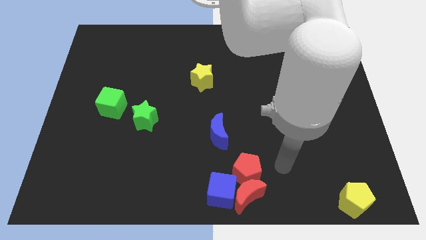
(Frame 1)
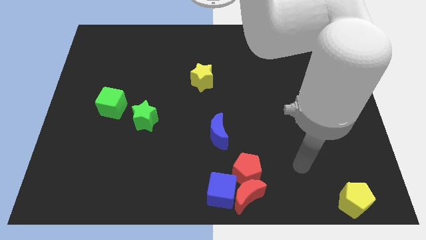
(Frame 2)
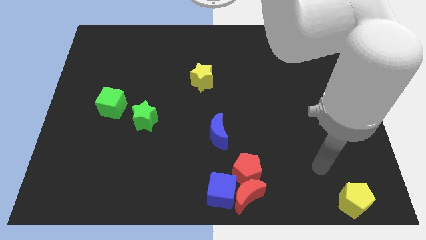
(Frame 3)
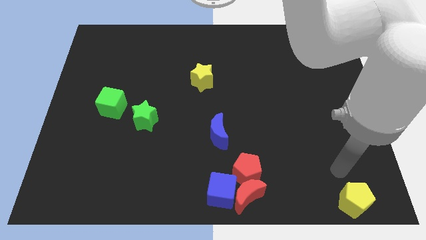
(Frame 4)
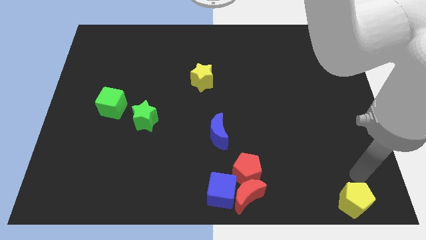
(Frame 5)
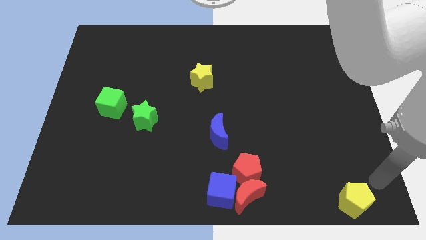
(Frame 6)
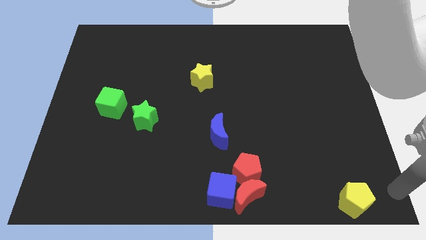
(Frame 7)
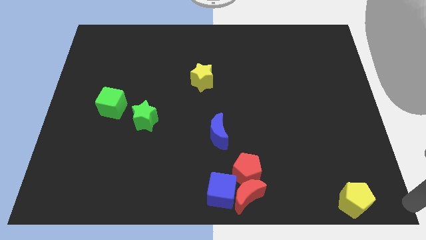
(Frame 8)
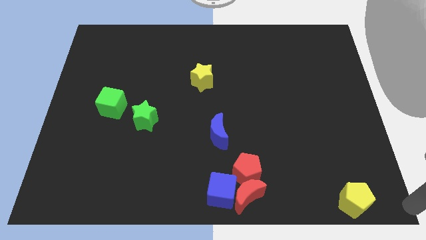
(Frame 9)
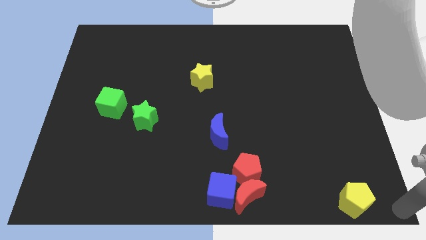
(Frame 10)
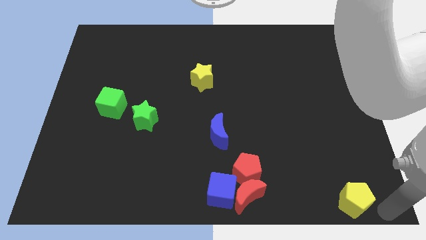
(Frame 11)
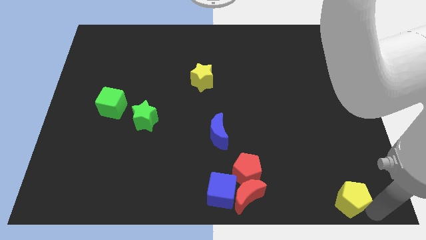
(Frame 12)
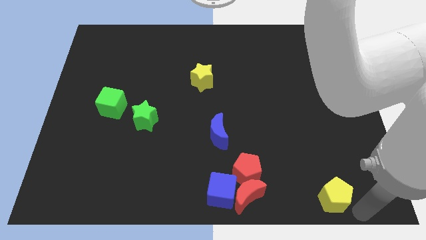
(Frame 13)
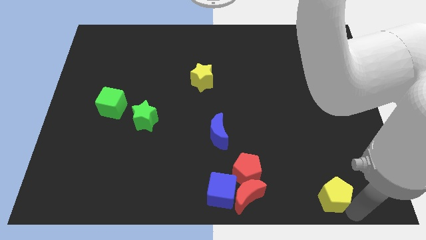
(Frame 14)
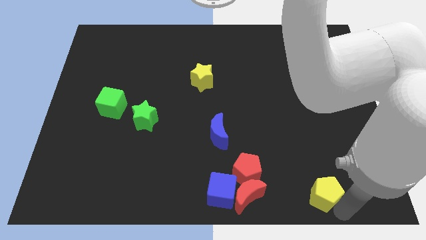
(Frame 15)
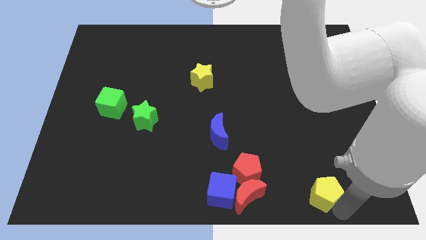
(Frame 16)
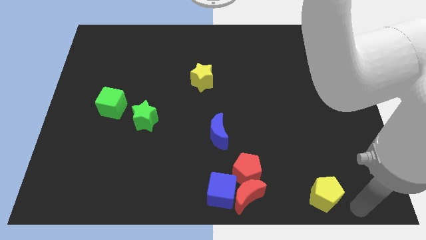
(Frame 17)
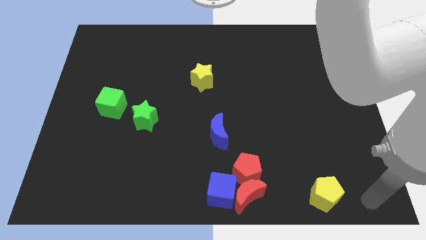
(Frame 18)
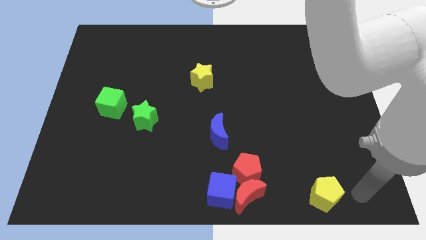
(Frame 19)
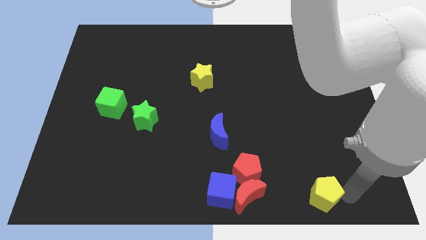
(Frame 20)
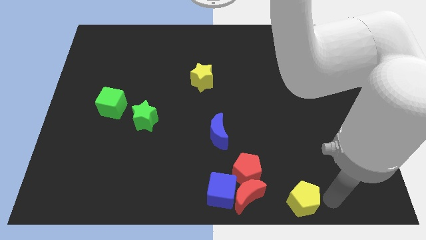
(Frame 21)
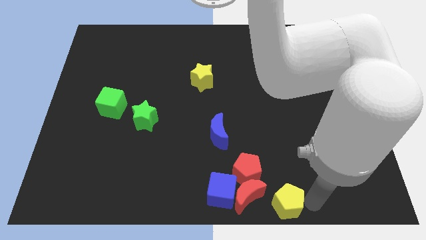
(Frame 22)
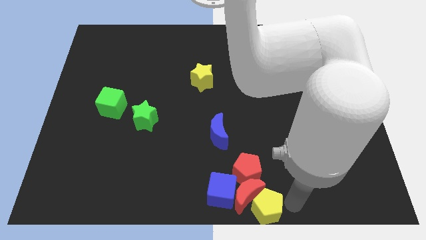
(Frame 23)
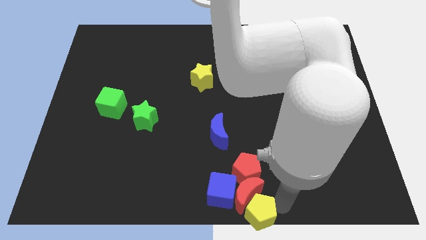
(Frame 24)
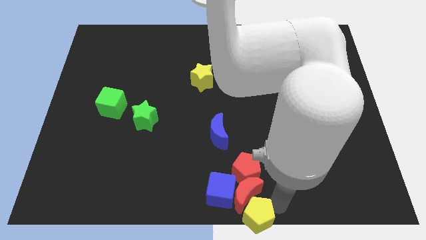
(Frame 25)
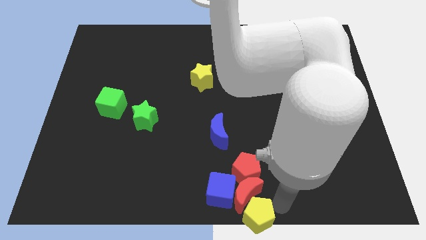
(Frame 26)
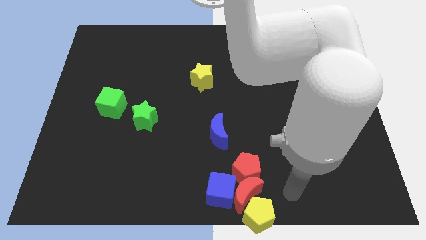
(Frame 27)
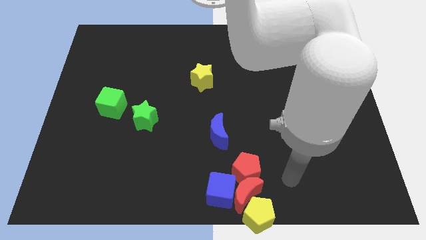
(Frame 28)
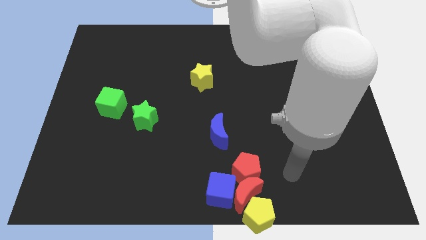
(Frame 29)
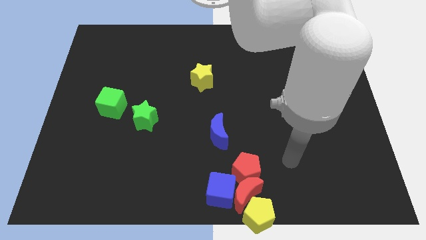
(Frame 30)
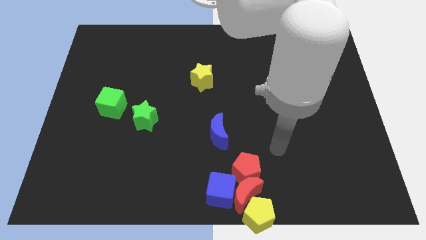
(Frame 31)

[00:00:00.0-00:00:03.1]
push the yellow pentagon to the bottom of the red crescent

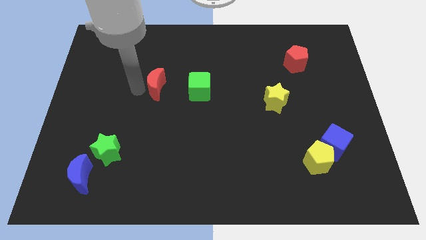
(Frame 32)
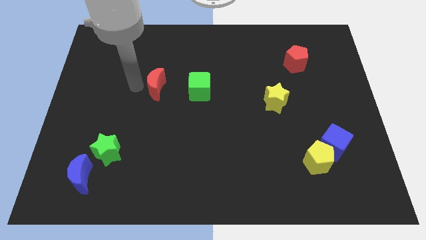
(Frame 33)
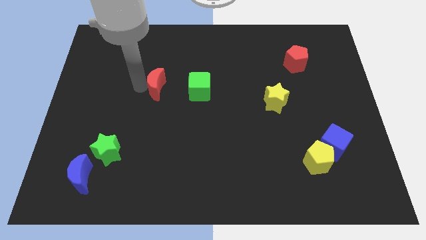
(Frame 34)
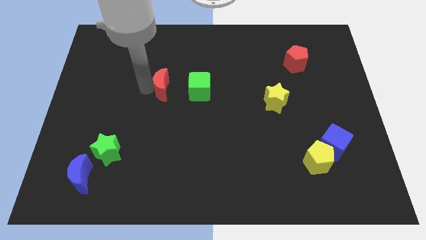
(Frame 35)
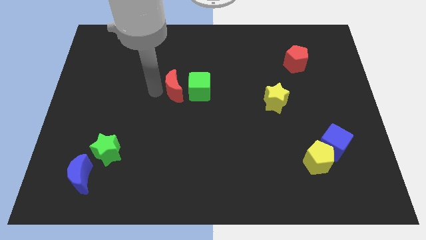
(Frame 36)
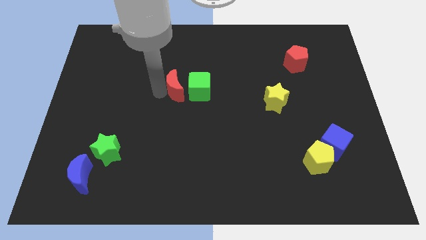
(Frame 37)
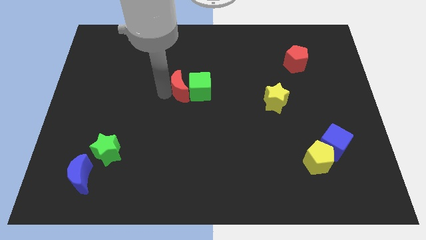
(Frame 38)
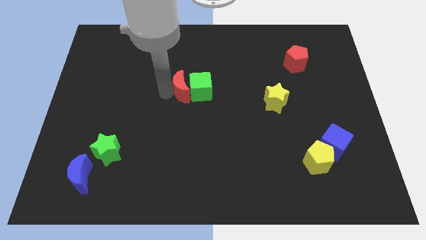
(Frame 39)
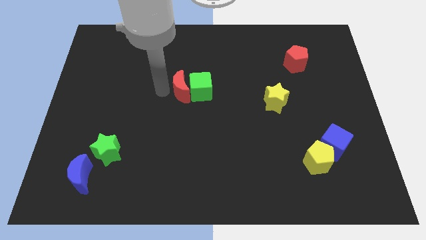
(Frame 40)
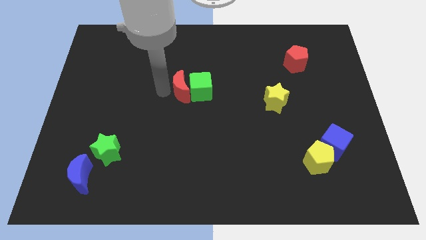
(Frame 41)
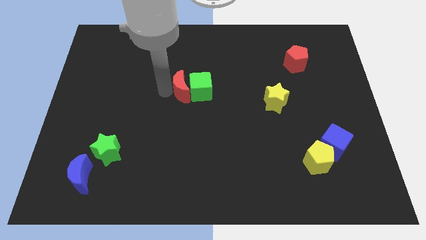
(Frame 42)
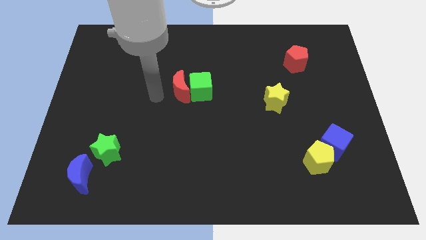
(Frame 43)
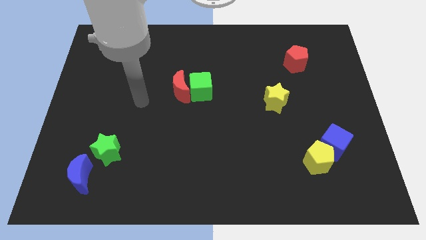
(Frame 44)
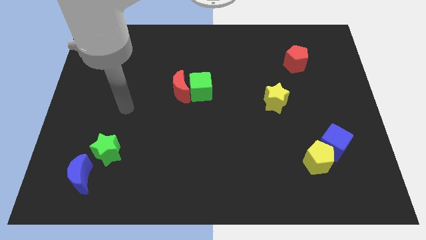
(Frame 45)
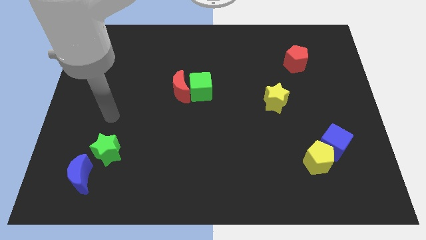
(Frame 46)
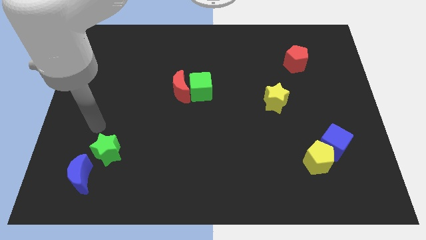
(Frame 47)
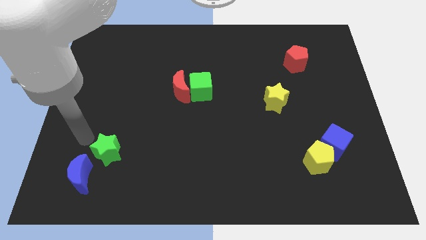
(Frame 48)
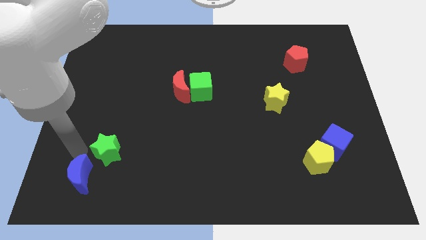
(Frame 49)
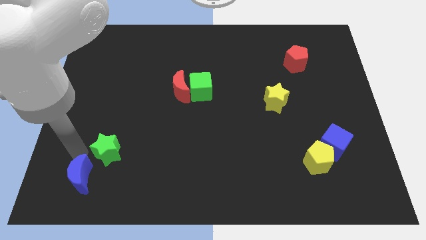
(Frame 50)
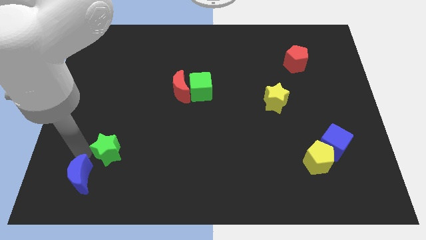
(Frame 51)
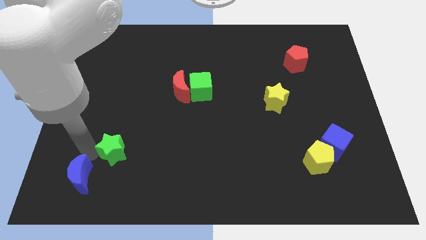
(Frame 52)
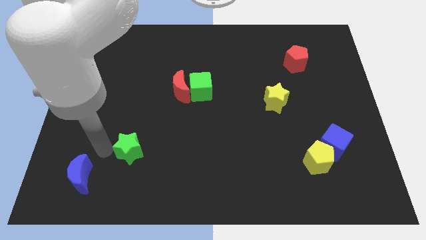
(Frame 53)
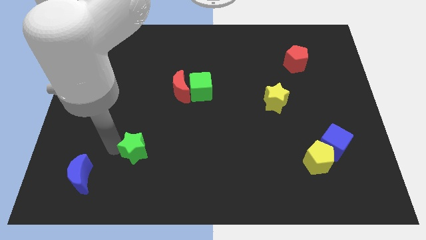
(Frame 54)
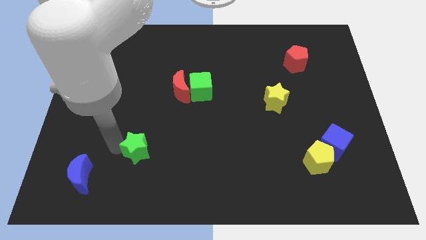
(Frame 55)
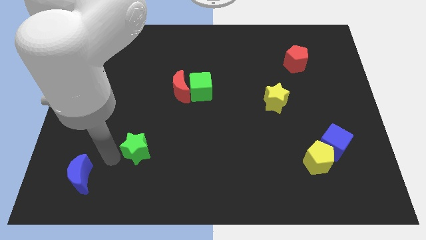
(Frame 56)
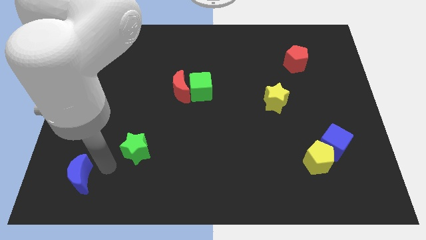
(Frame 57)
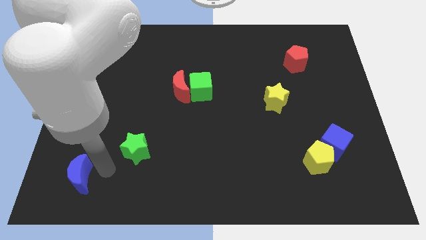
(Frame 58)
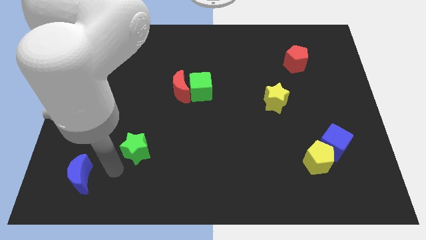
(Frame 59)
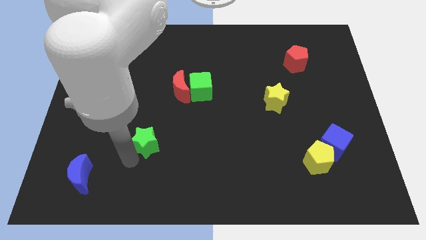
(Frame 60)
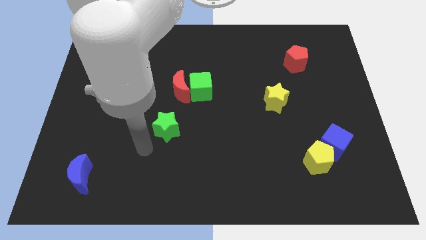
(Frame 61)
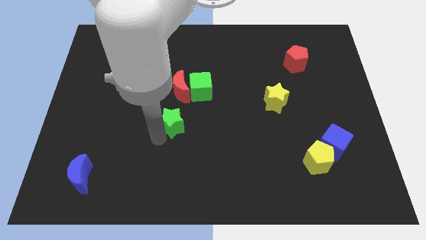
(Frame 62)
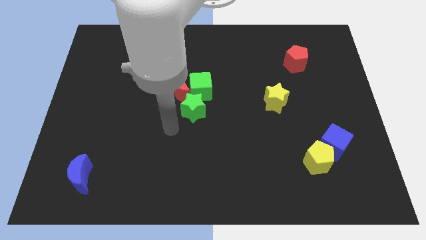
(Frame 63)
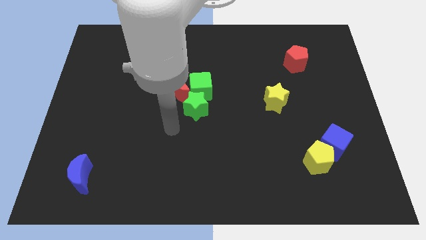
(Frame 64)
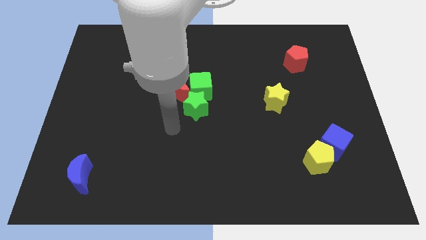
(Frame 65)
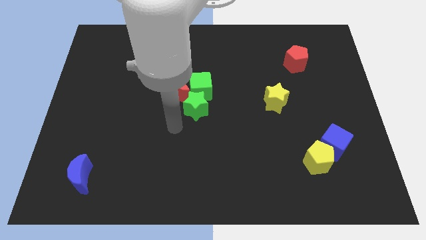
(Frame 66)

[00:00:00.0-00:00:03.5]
move the red moon and green star close to the green cube

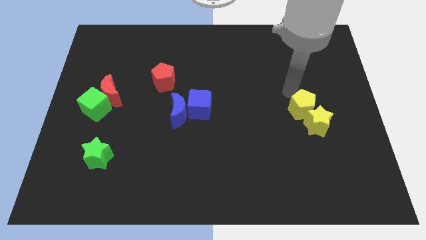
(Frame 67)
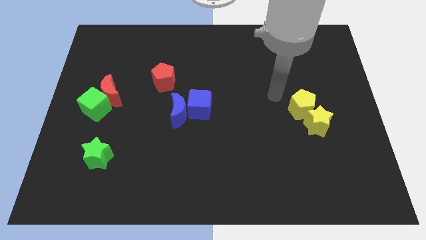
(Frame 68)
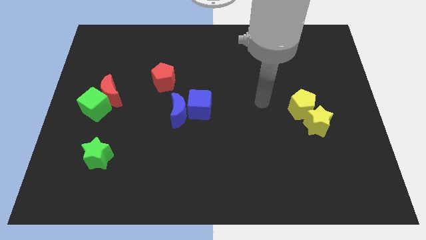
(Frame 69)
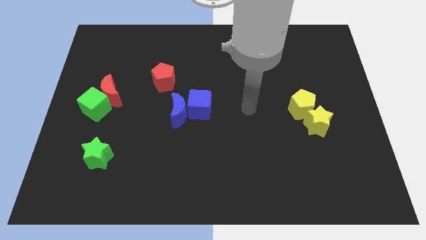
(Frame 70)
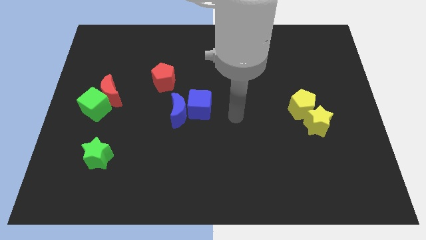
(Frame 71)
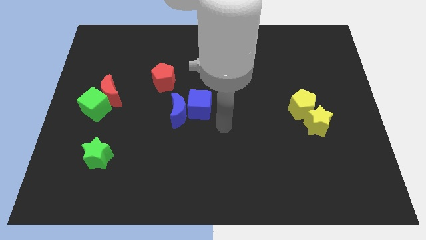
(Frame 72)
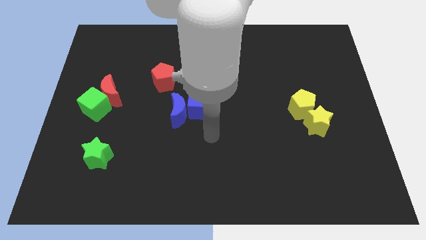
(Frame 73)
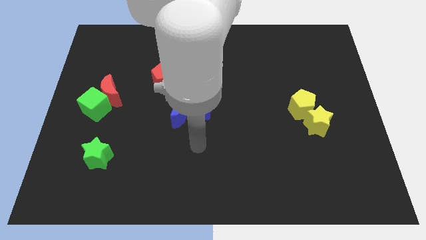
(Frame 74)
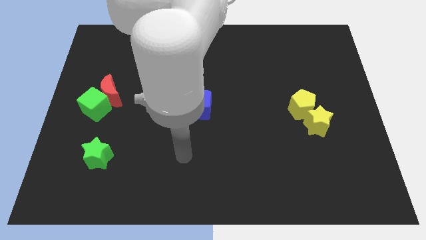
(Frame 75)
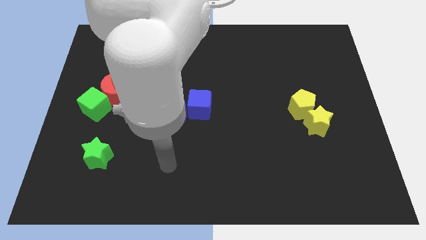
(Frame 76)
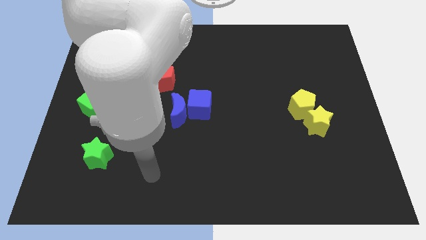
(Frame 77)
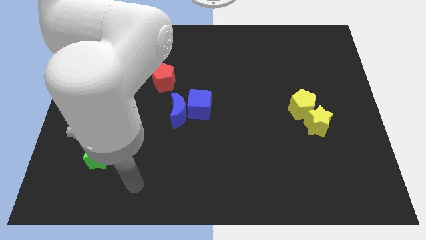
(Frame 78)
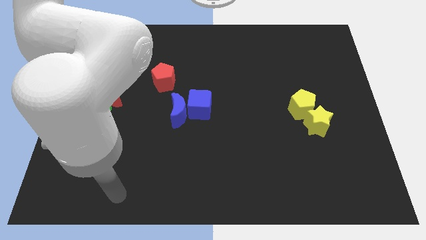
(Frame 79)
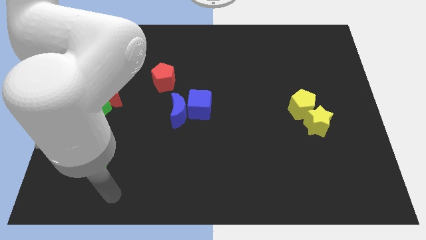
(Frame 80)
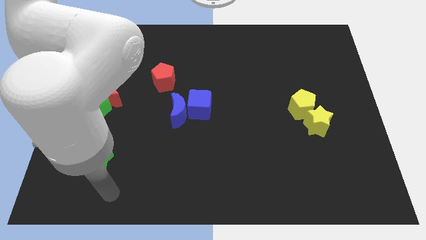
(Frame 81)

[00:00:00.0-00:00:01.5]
move the arm to the bottom of the green star

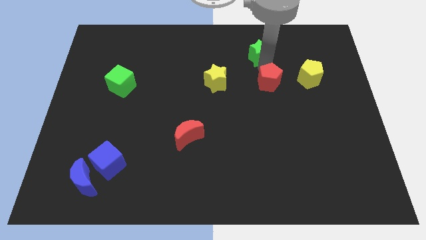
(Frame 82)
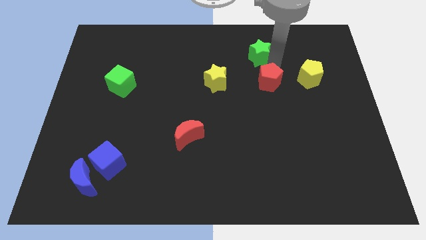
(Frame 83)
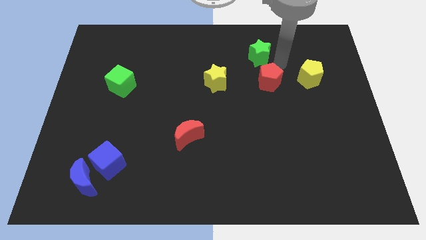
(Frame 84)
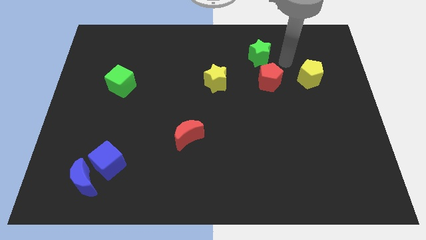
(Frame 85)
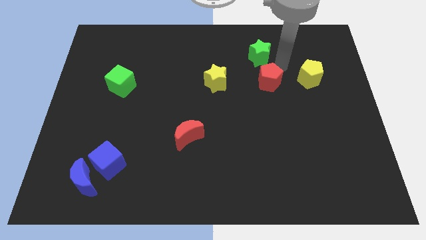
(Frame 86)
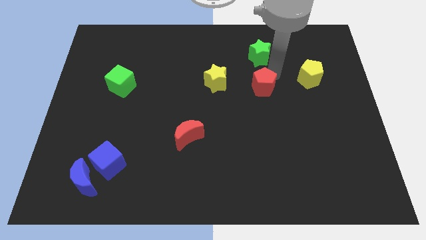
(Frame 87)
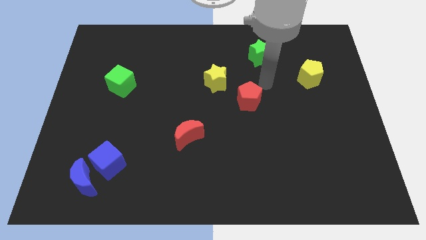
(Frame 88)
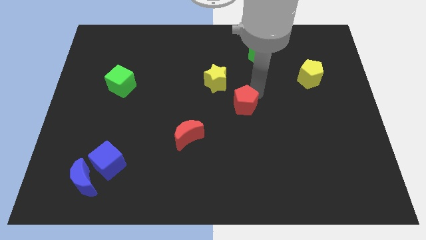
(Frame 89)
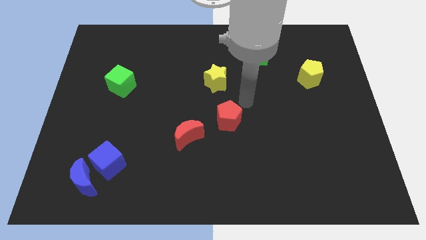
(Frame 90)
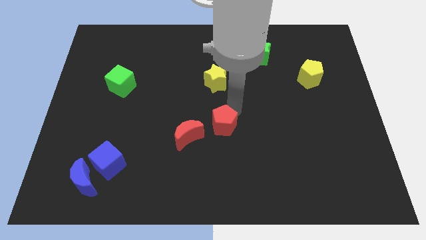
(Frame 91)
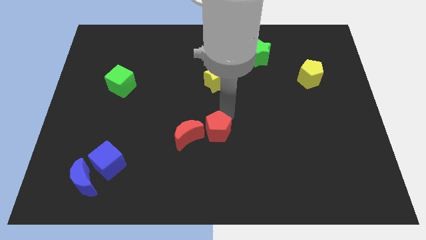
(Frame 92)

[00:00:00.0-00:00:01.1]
push the red pentagon close to the red crescent
